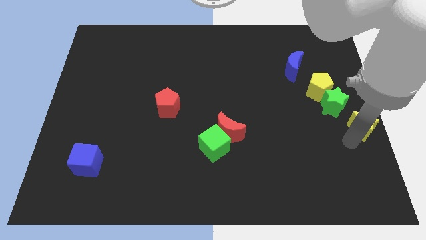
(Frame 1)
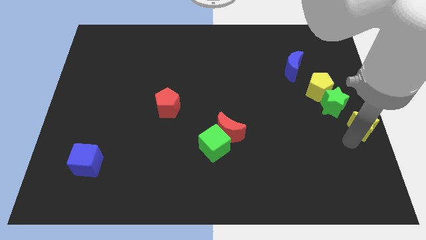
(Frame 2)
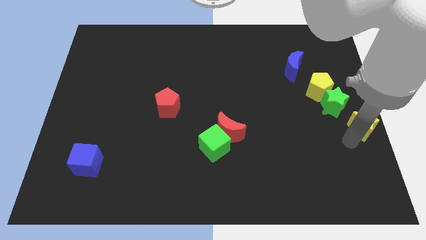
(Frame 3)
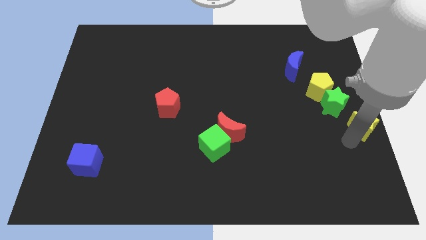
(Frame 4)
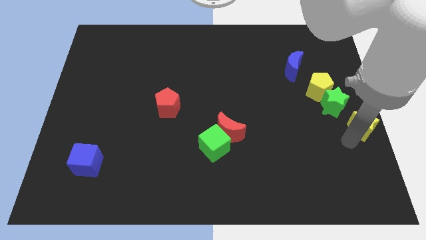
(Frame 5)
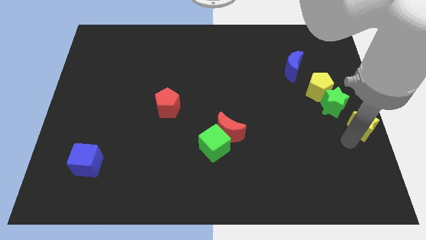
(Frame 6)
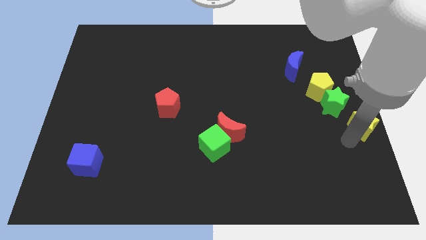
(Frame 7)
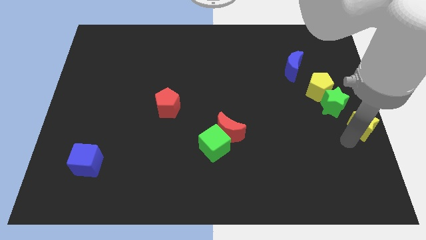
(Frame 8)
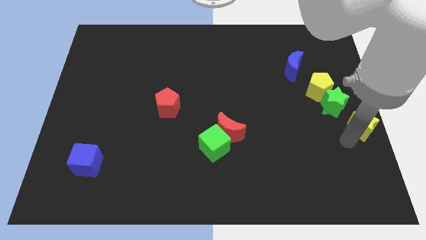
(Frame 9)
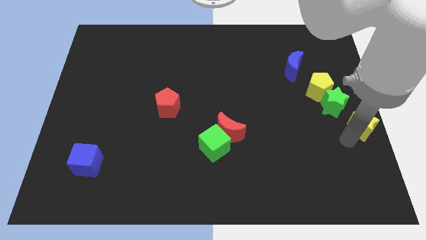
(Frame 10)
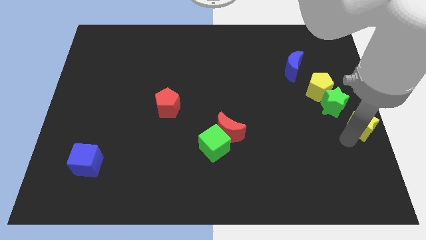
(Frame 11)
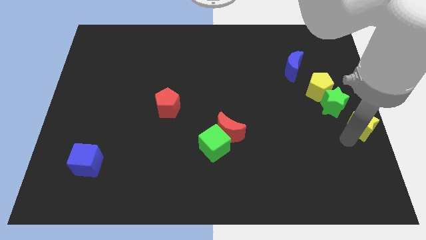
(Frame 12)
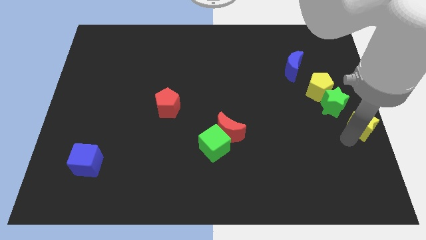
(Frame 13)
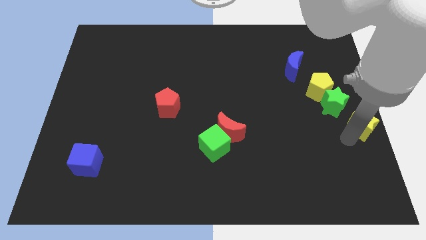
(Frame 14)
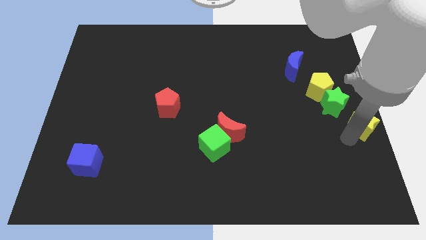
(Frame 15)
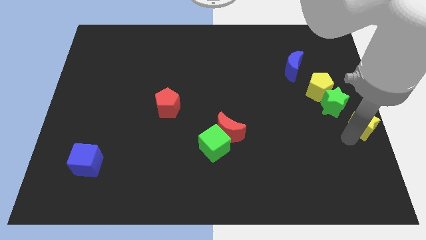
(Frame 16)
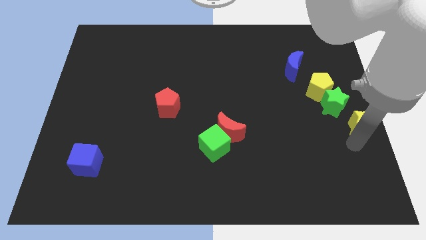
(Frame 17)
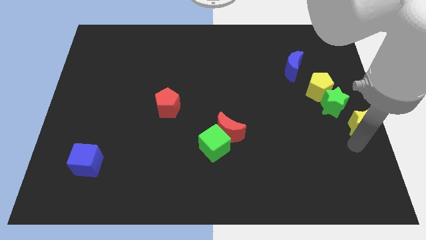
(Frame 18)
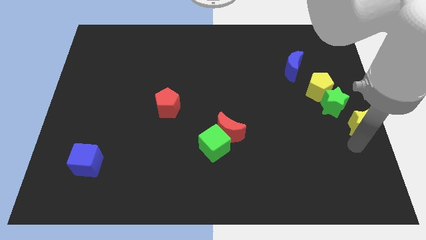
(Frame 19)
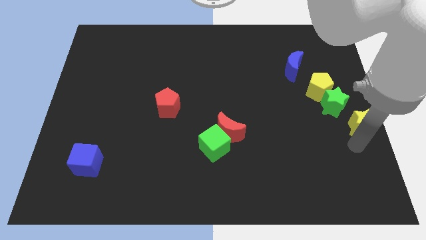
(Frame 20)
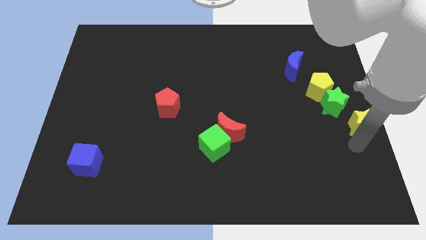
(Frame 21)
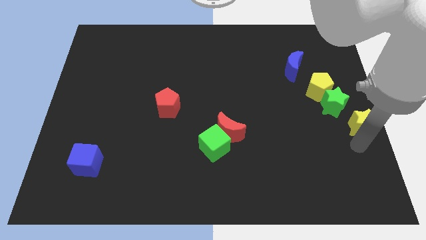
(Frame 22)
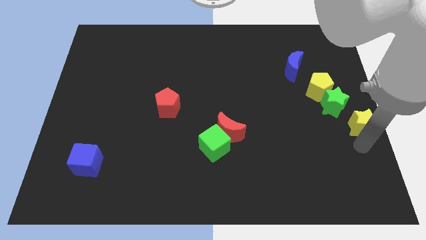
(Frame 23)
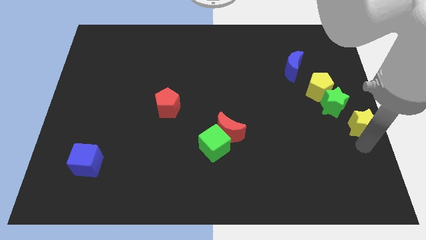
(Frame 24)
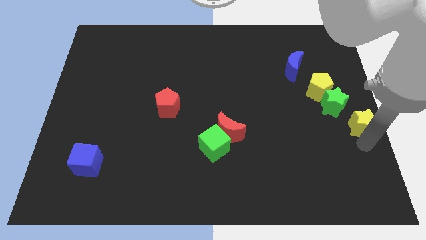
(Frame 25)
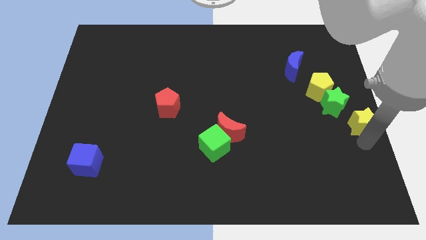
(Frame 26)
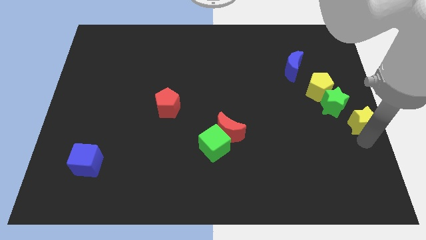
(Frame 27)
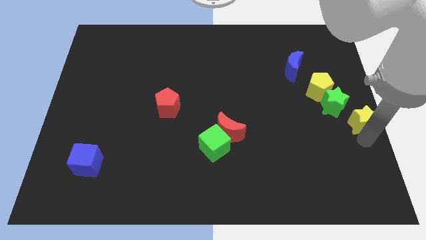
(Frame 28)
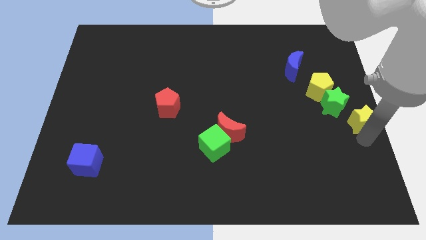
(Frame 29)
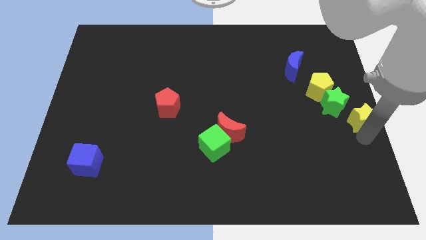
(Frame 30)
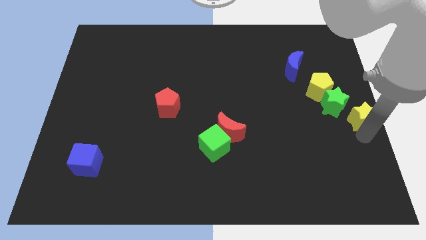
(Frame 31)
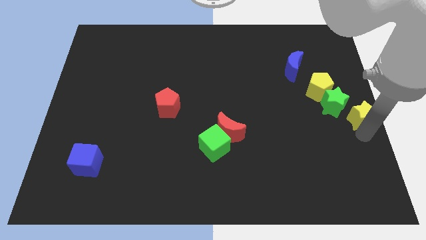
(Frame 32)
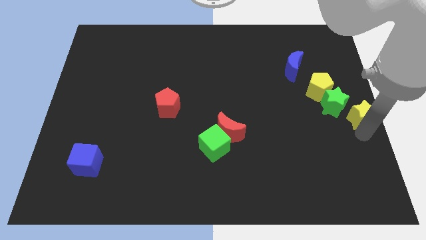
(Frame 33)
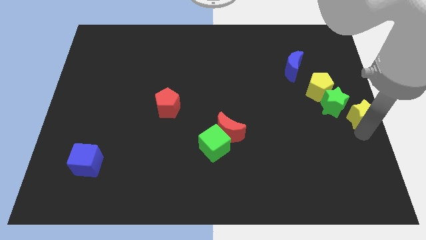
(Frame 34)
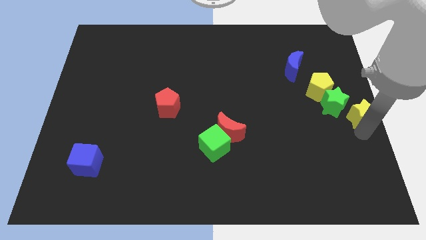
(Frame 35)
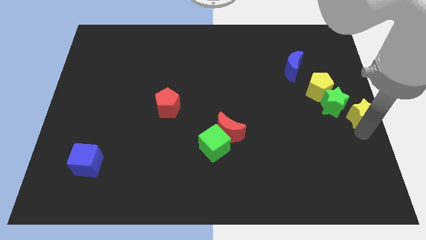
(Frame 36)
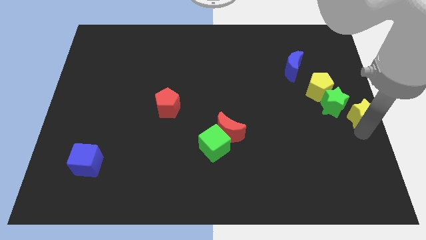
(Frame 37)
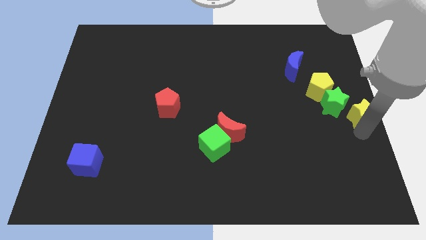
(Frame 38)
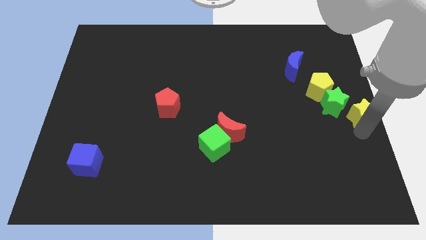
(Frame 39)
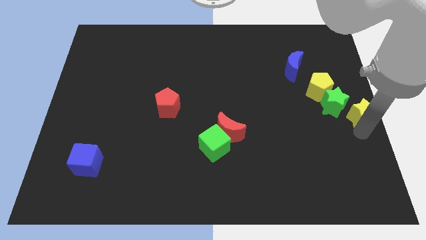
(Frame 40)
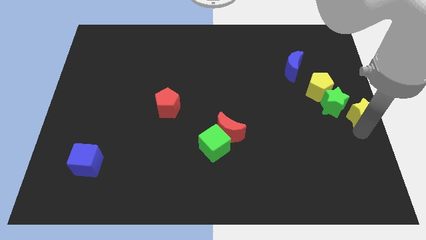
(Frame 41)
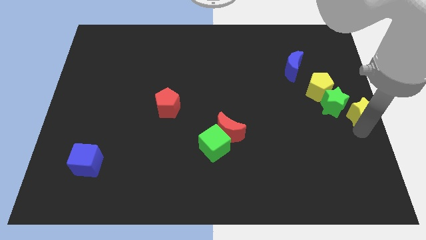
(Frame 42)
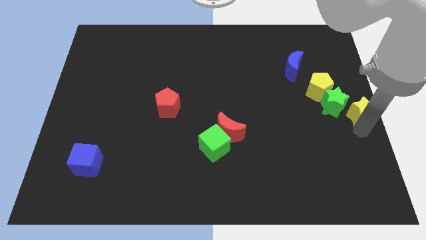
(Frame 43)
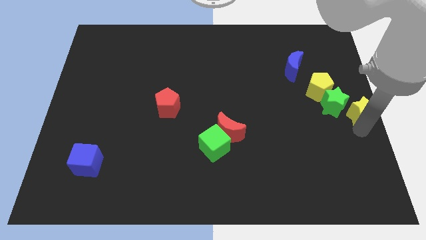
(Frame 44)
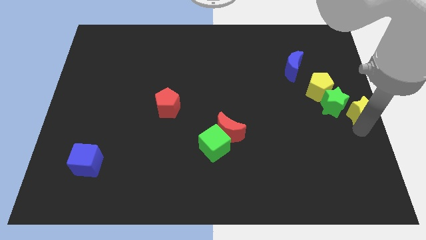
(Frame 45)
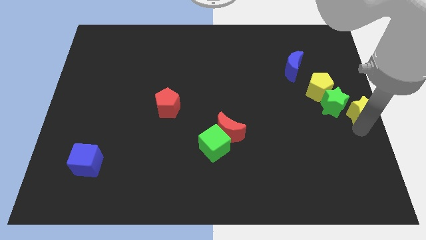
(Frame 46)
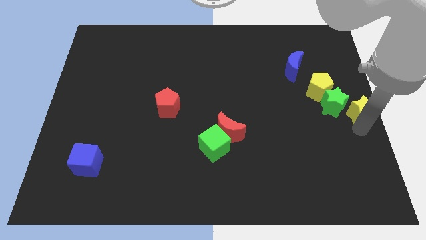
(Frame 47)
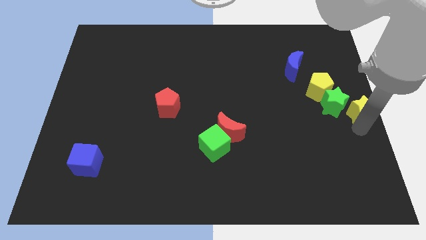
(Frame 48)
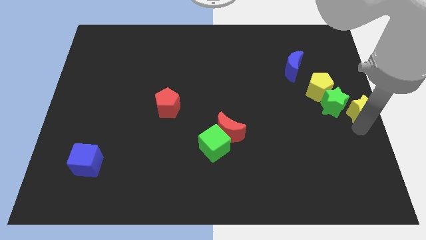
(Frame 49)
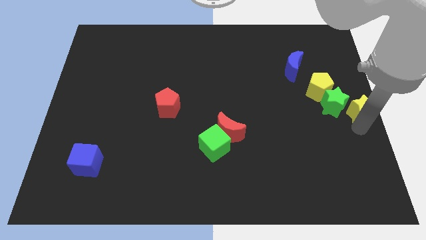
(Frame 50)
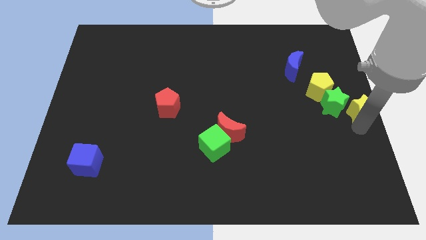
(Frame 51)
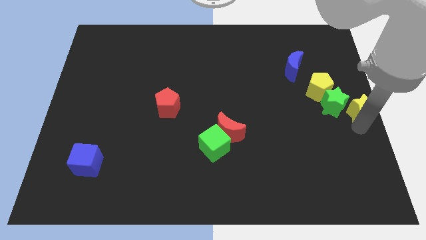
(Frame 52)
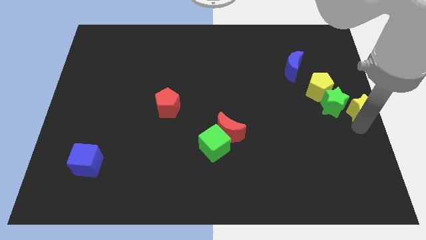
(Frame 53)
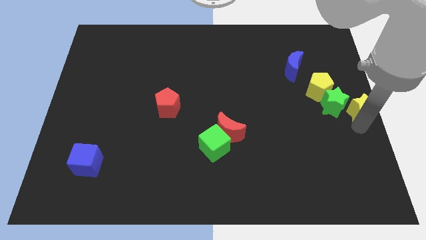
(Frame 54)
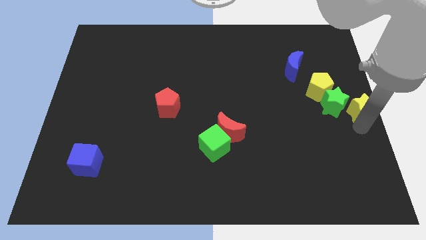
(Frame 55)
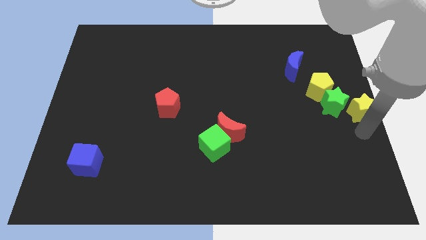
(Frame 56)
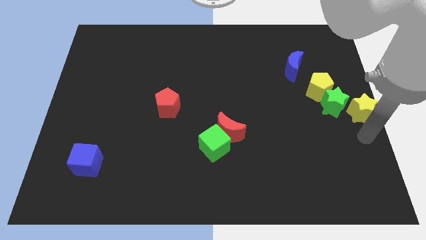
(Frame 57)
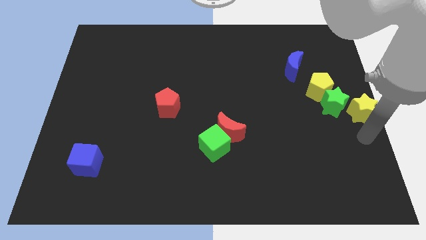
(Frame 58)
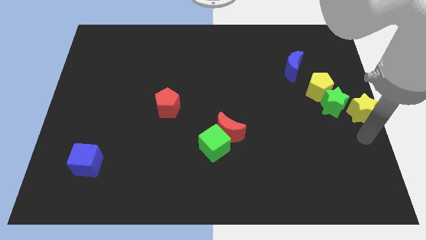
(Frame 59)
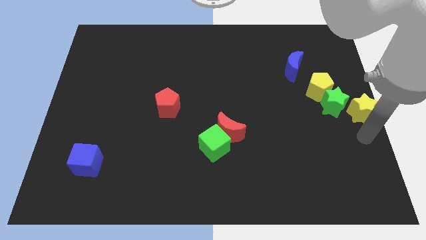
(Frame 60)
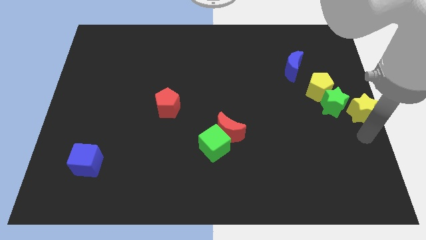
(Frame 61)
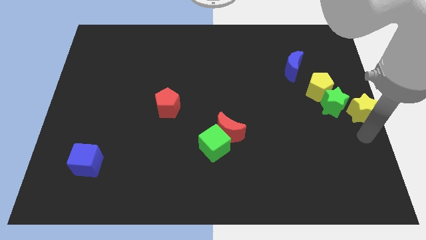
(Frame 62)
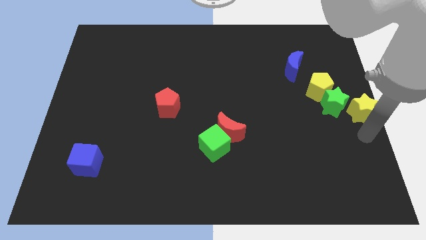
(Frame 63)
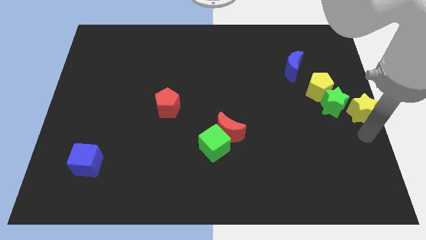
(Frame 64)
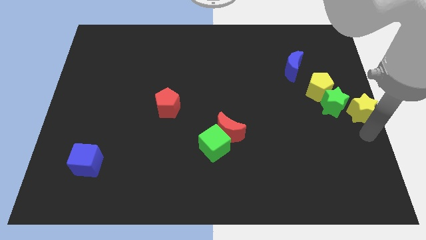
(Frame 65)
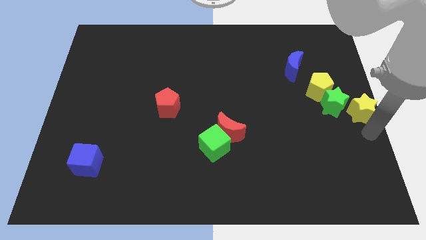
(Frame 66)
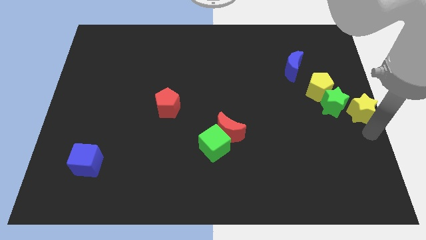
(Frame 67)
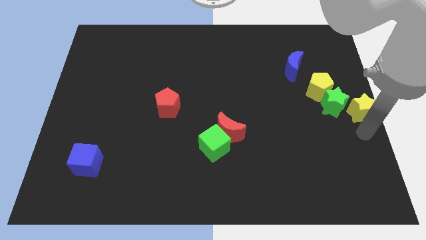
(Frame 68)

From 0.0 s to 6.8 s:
place the yellow star beside the green star

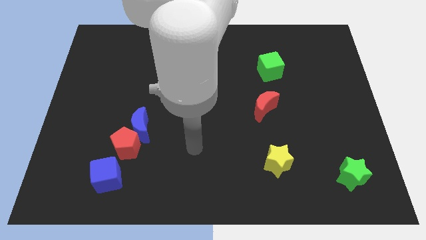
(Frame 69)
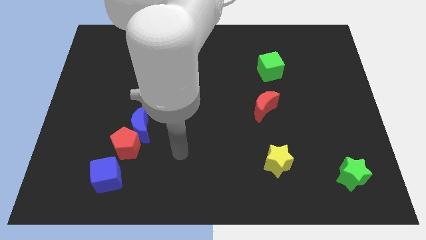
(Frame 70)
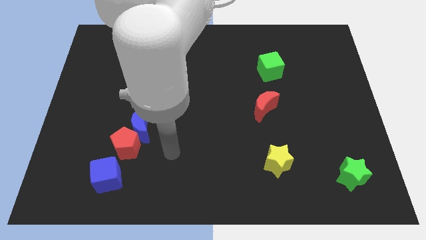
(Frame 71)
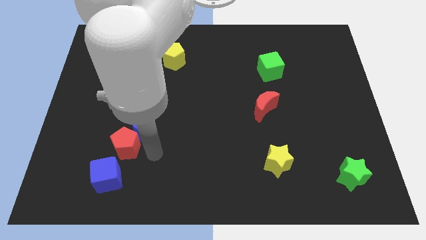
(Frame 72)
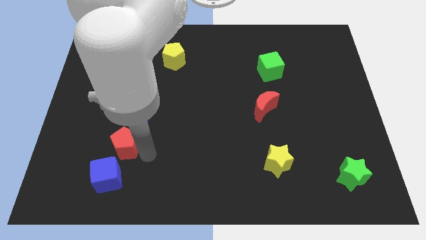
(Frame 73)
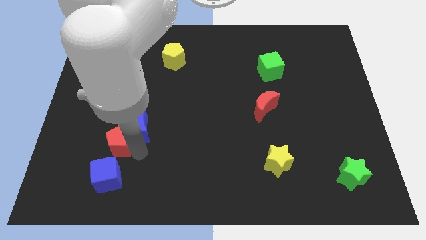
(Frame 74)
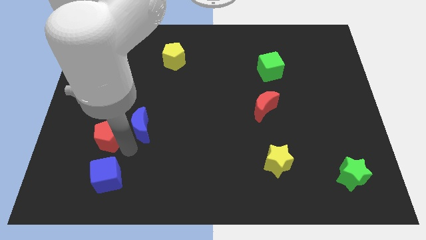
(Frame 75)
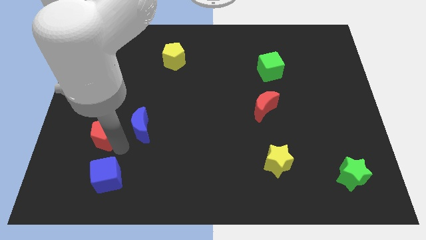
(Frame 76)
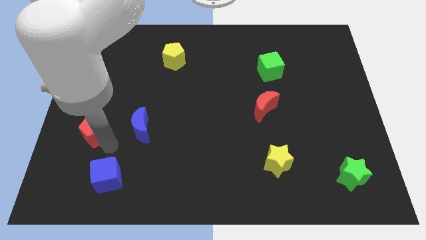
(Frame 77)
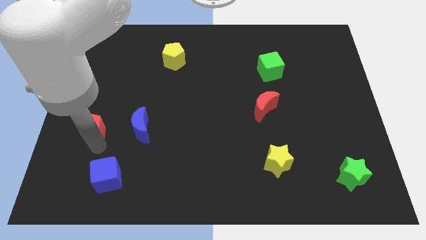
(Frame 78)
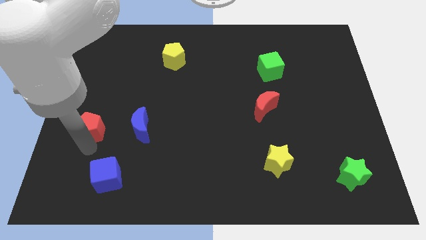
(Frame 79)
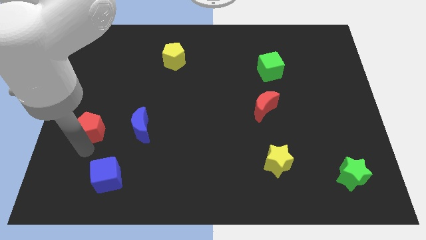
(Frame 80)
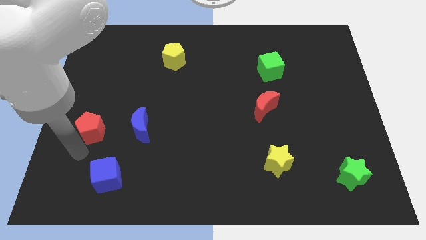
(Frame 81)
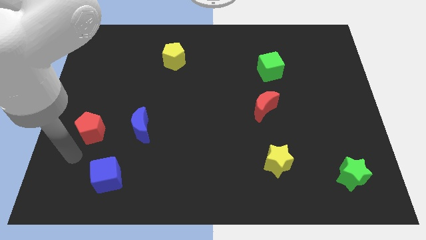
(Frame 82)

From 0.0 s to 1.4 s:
separate the red pentagon from the blue crescent

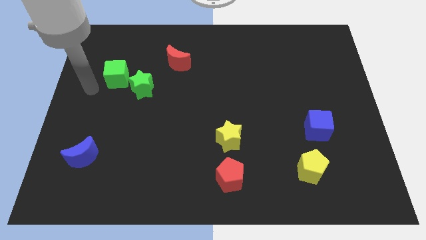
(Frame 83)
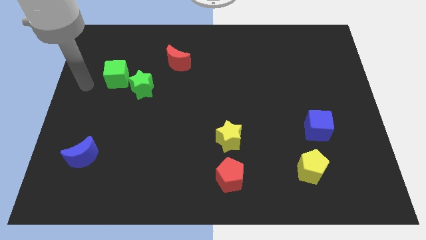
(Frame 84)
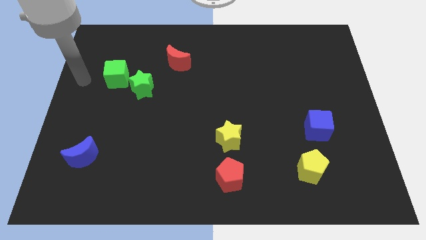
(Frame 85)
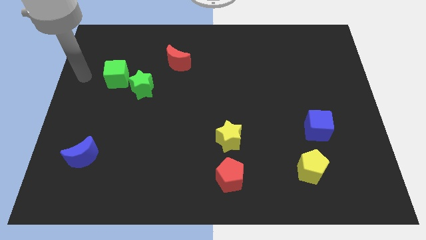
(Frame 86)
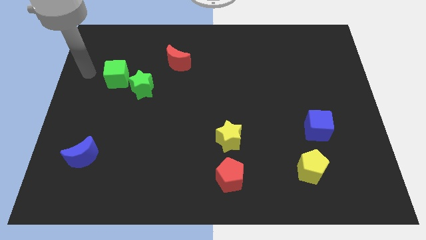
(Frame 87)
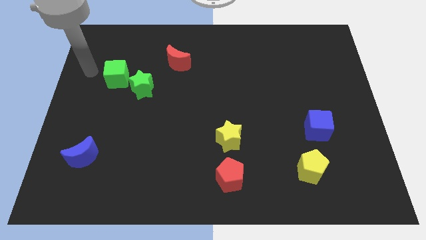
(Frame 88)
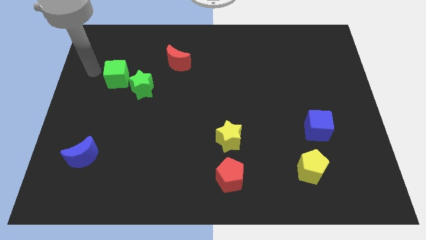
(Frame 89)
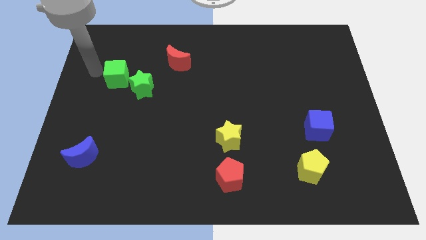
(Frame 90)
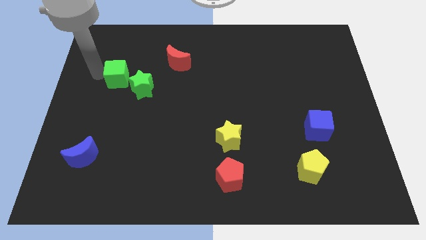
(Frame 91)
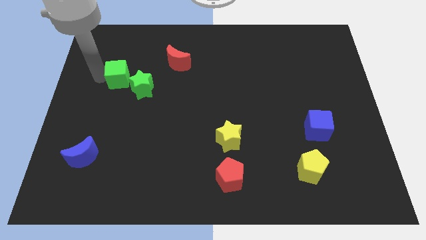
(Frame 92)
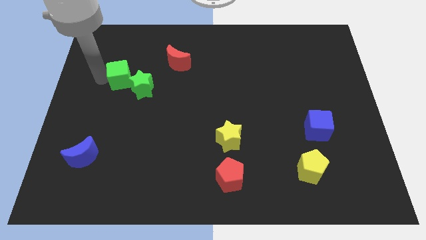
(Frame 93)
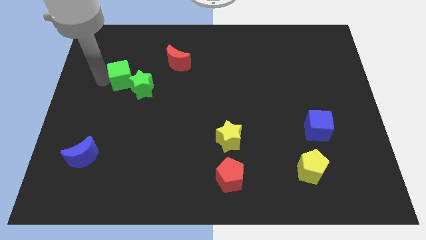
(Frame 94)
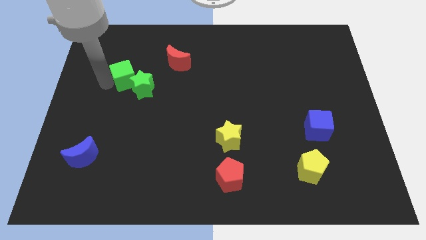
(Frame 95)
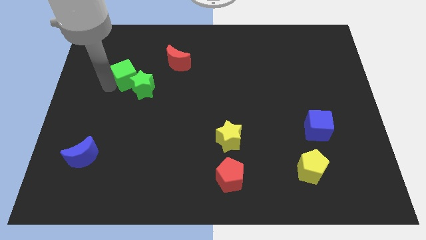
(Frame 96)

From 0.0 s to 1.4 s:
push green cube into the green star
